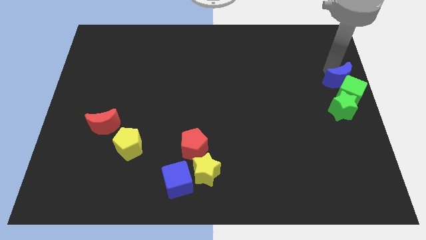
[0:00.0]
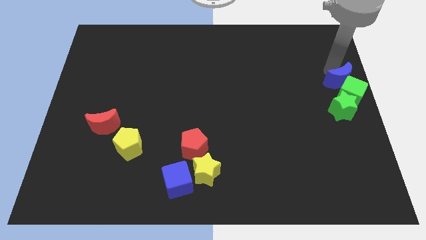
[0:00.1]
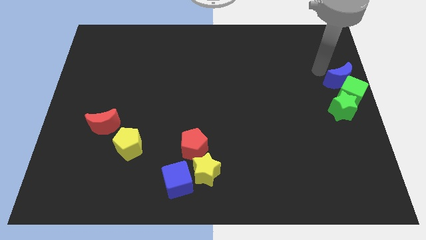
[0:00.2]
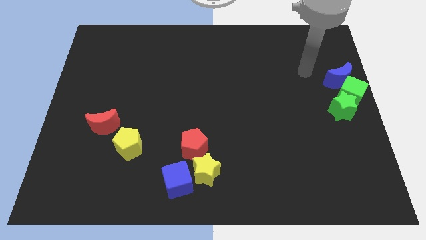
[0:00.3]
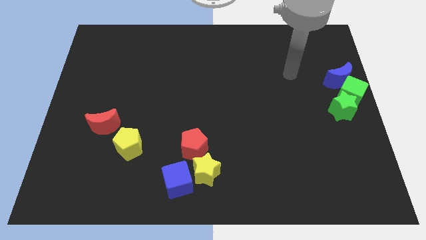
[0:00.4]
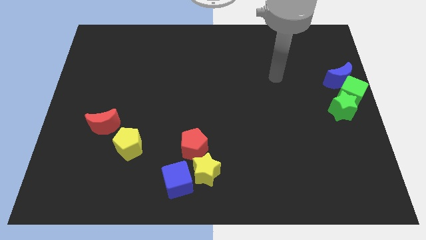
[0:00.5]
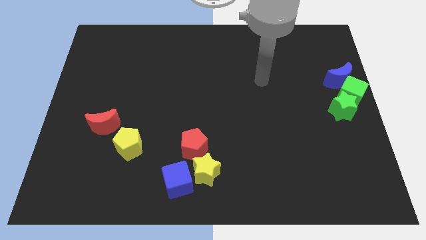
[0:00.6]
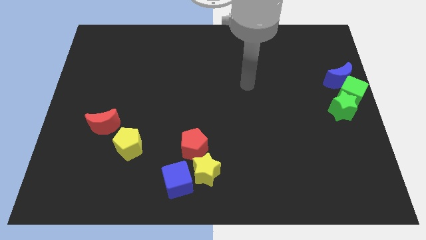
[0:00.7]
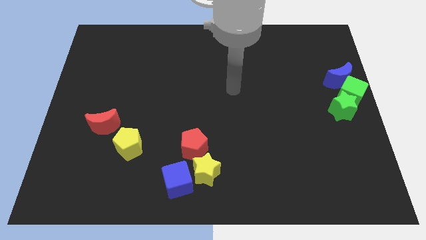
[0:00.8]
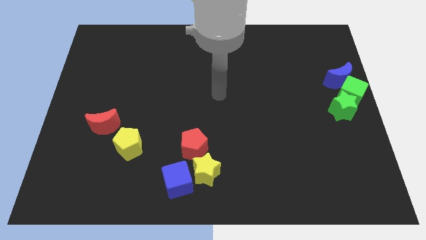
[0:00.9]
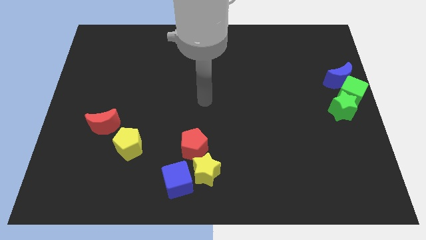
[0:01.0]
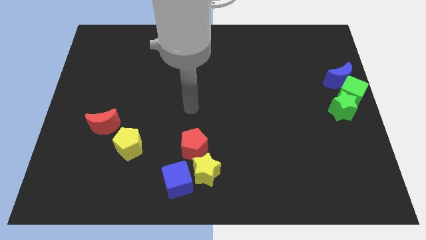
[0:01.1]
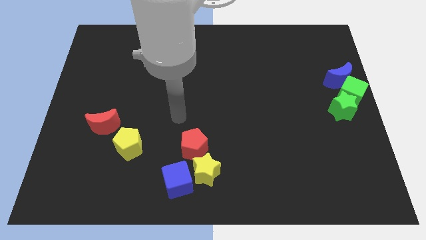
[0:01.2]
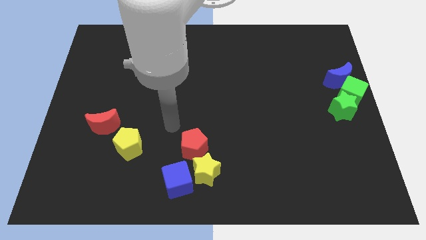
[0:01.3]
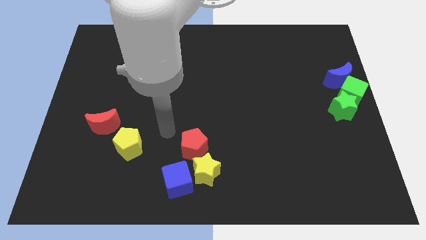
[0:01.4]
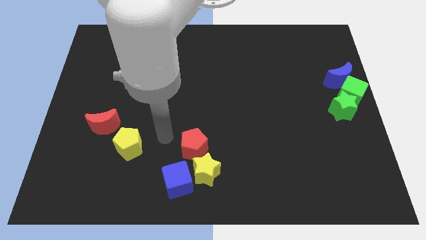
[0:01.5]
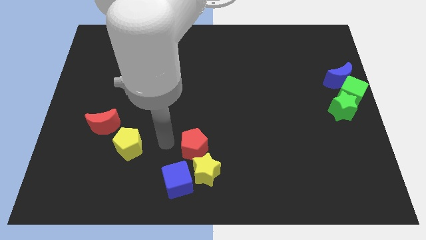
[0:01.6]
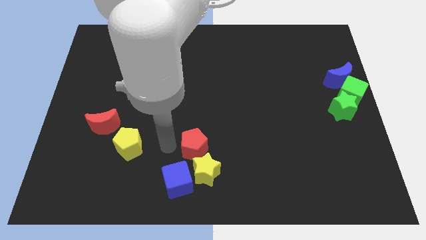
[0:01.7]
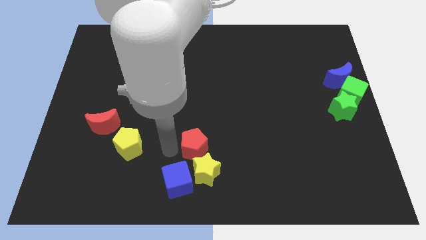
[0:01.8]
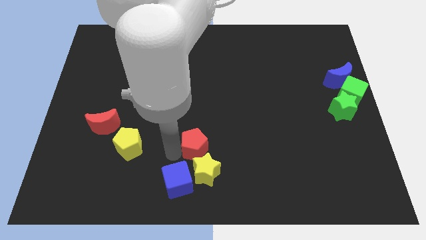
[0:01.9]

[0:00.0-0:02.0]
move your arm towards the red pentagon

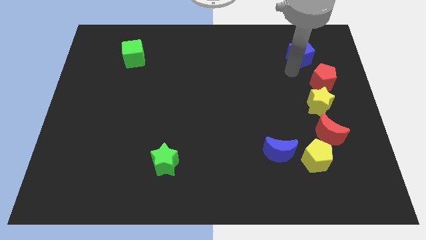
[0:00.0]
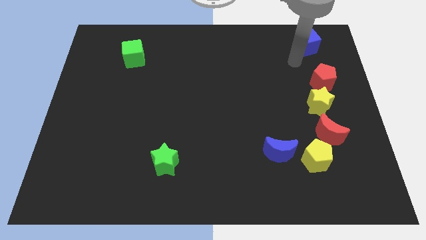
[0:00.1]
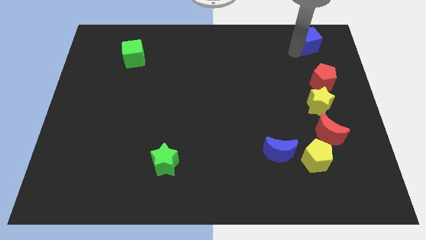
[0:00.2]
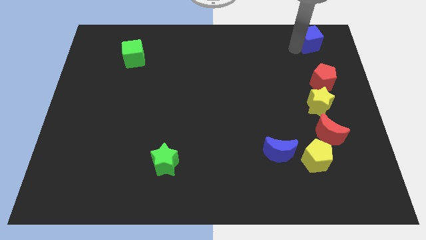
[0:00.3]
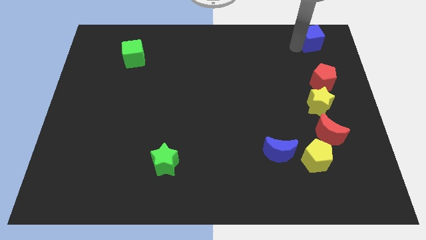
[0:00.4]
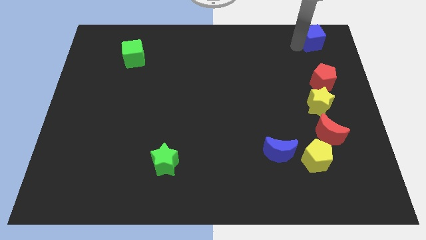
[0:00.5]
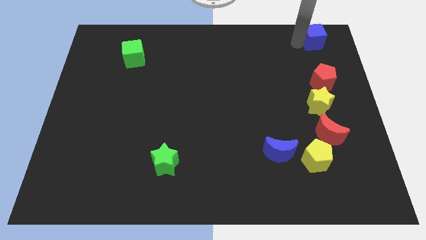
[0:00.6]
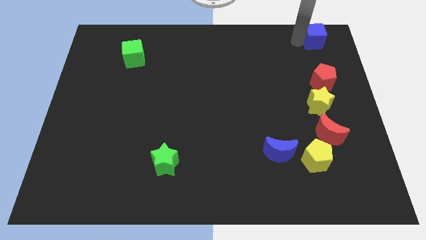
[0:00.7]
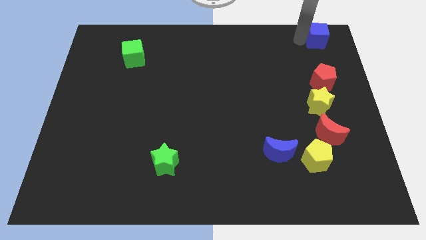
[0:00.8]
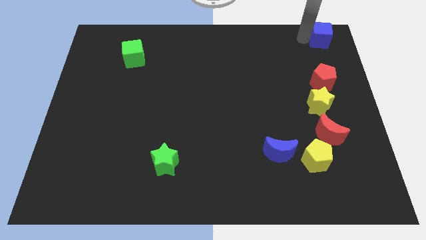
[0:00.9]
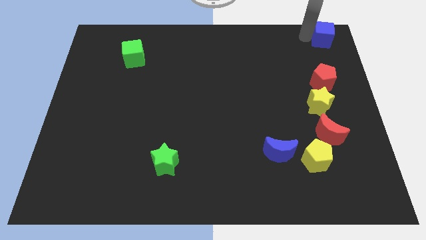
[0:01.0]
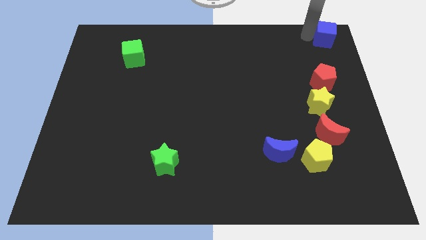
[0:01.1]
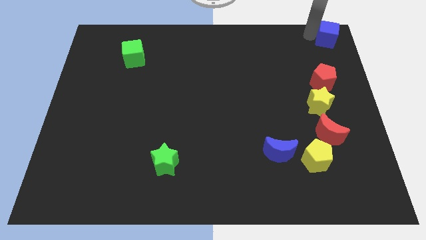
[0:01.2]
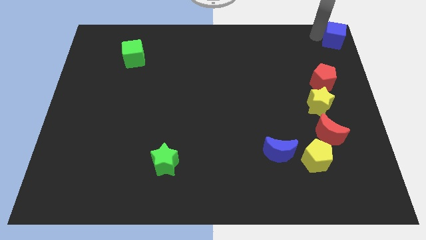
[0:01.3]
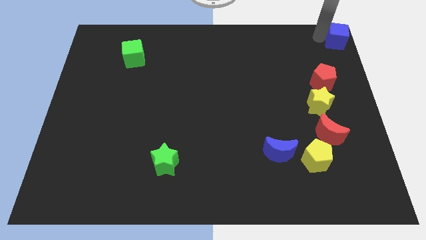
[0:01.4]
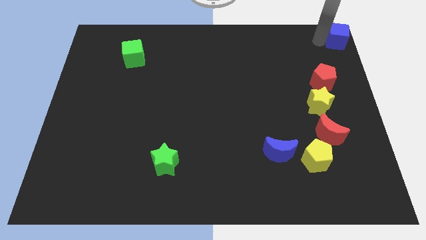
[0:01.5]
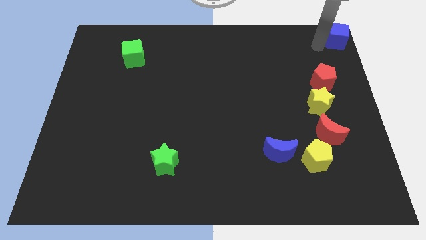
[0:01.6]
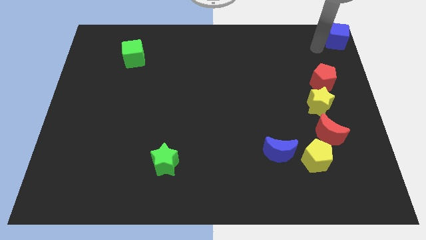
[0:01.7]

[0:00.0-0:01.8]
move the blue cube to the top right corner

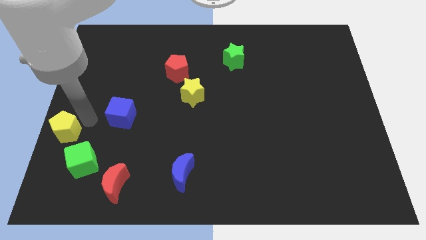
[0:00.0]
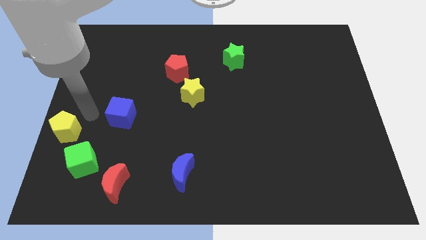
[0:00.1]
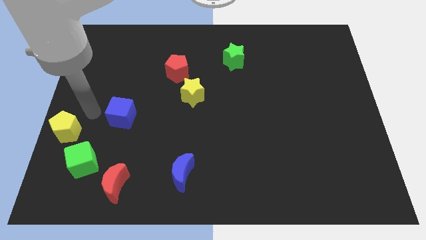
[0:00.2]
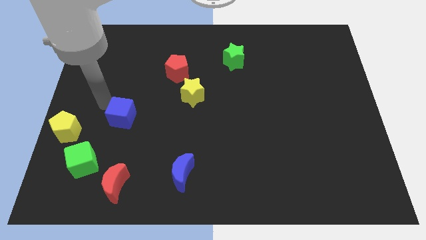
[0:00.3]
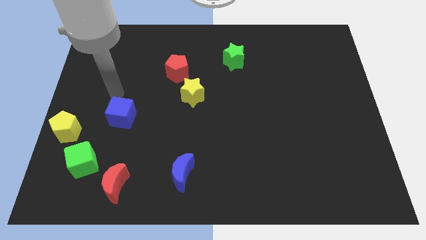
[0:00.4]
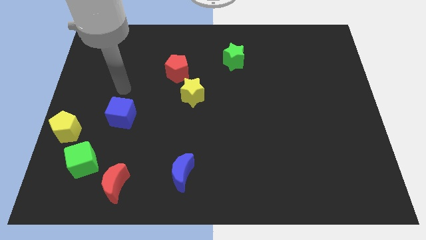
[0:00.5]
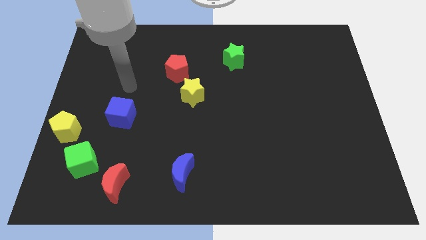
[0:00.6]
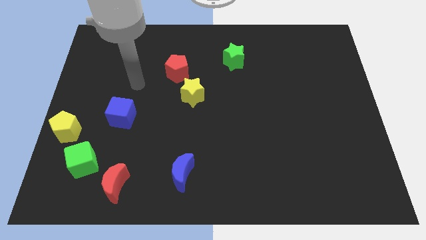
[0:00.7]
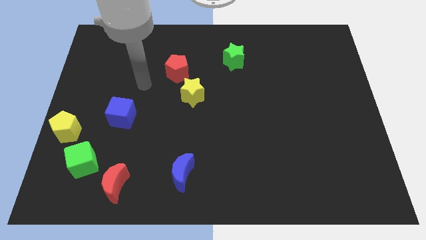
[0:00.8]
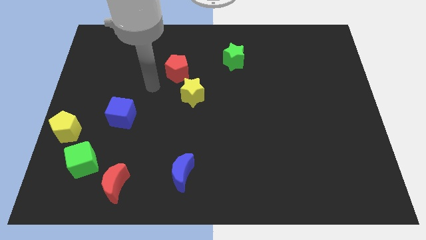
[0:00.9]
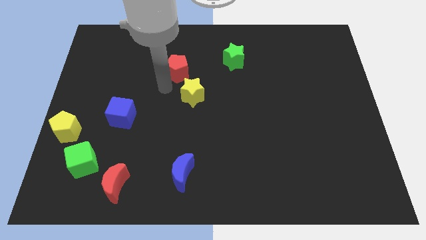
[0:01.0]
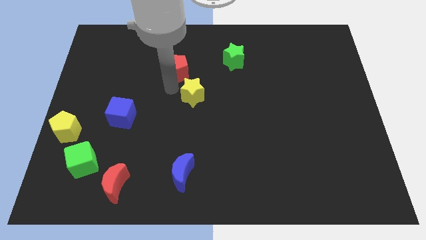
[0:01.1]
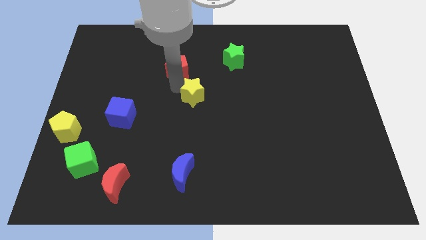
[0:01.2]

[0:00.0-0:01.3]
point your arm at the left of the yellow star

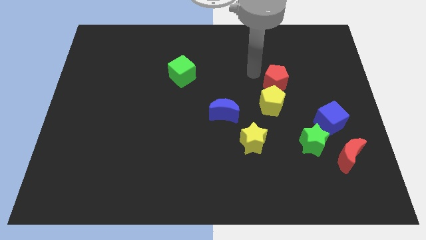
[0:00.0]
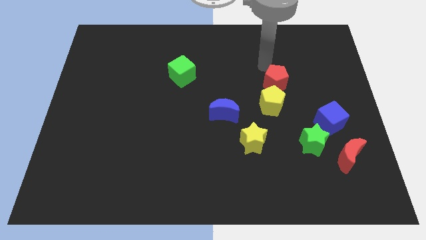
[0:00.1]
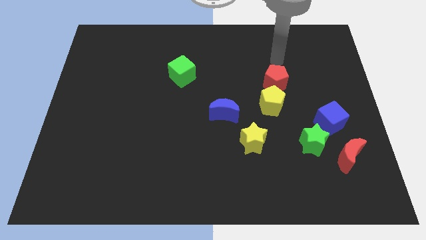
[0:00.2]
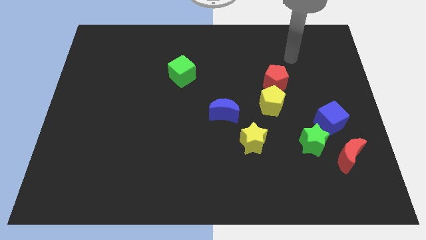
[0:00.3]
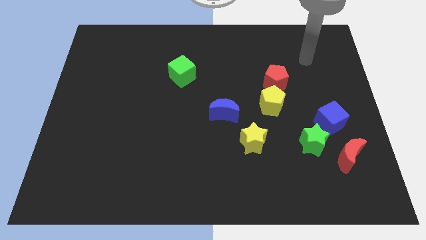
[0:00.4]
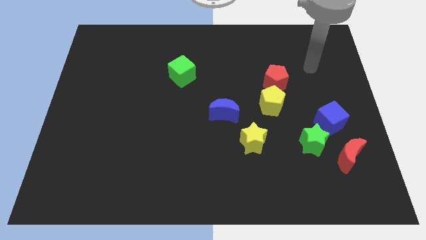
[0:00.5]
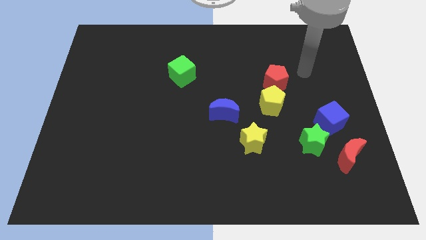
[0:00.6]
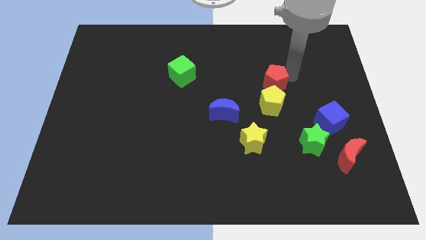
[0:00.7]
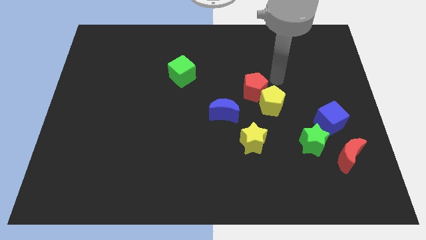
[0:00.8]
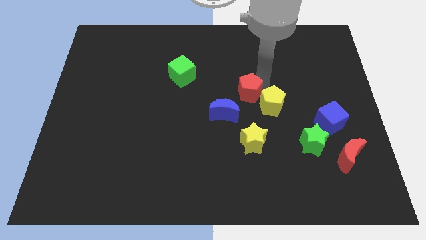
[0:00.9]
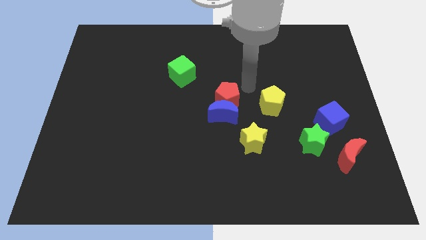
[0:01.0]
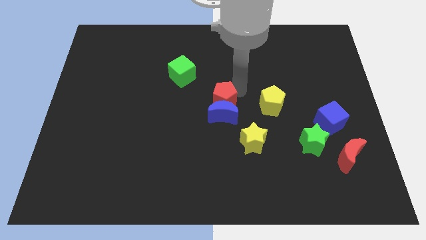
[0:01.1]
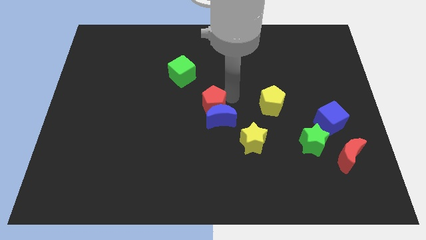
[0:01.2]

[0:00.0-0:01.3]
push the red pentagon towards the center of the board

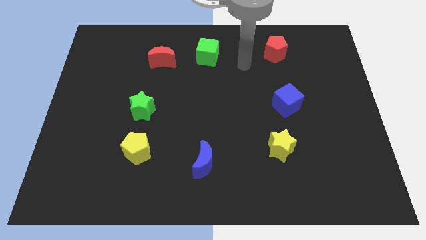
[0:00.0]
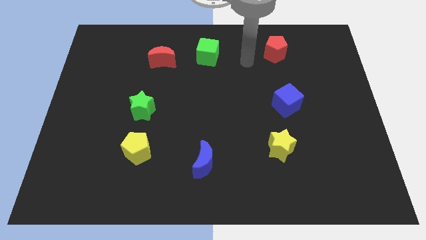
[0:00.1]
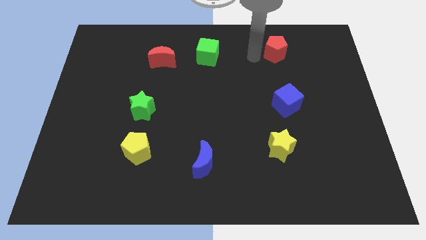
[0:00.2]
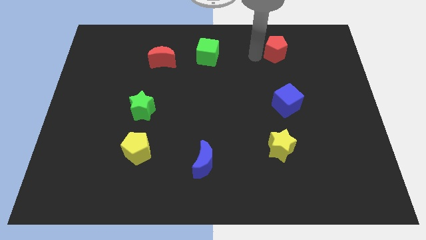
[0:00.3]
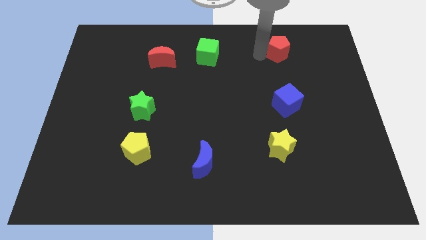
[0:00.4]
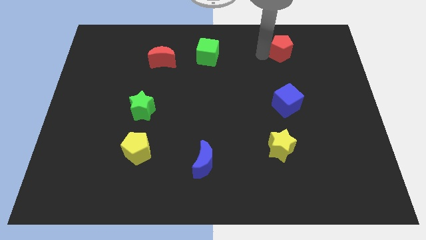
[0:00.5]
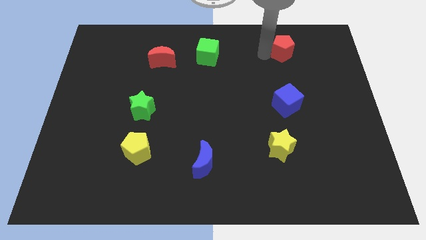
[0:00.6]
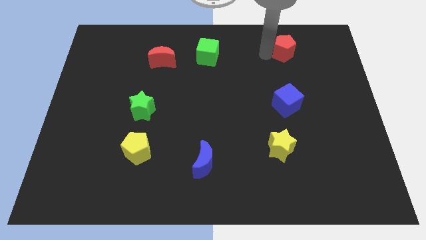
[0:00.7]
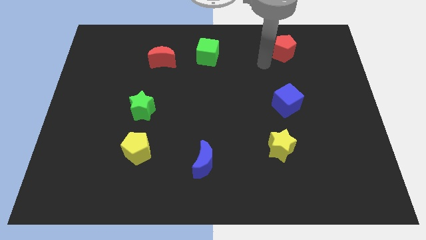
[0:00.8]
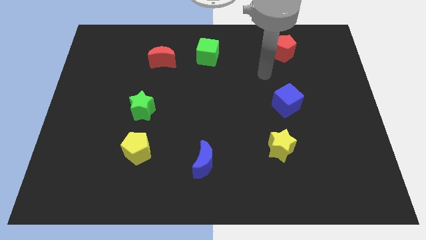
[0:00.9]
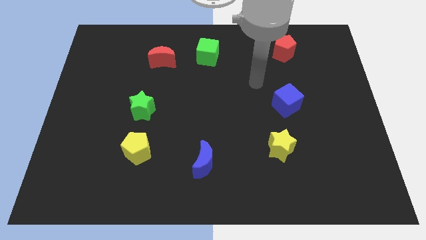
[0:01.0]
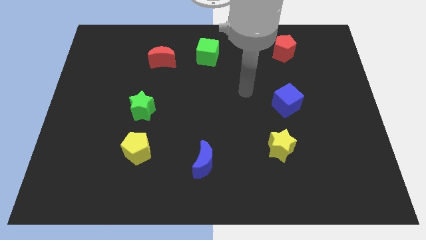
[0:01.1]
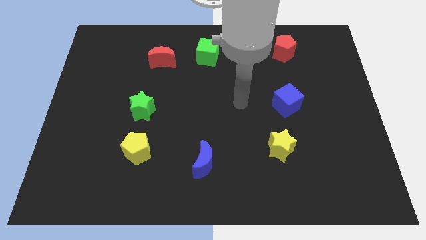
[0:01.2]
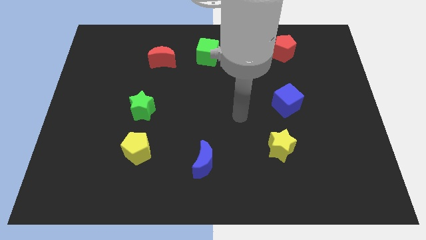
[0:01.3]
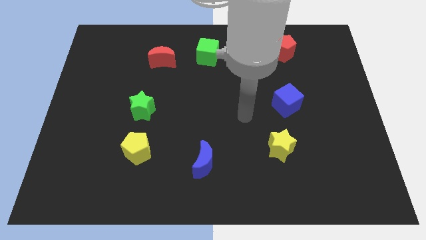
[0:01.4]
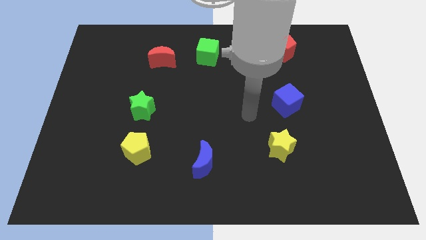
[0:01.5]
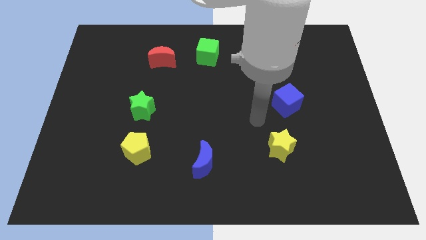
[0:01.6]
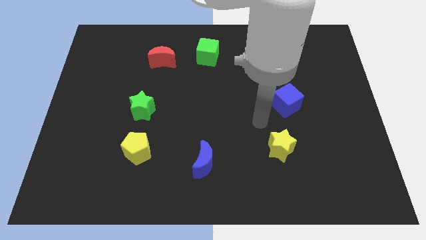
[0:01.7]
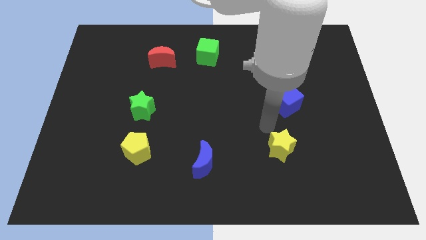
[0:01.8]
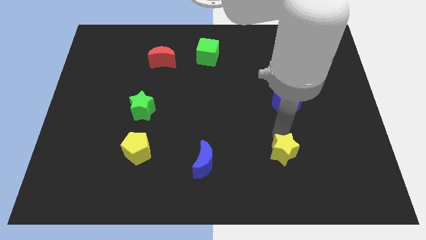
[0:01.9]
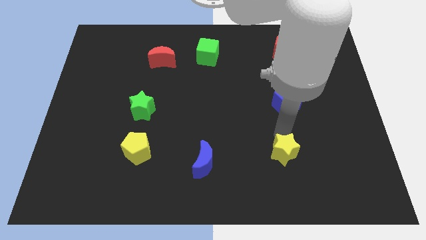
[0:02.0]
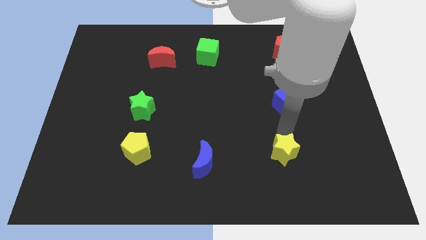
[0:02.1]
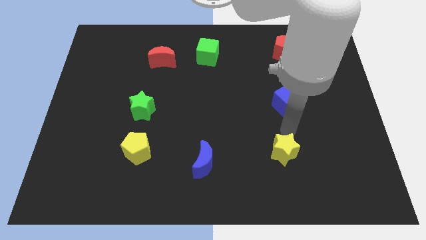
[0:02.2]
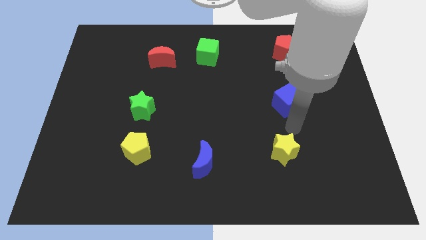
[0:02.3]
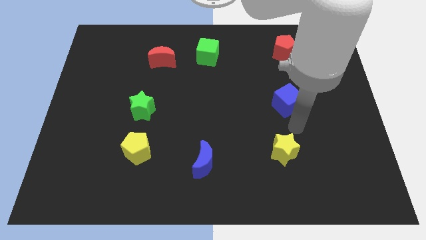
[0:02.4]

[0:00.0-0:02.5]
adjust the red pentagon and yellow star to form a vertical line with the blue cube
